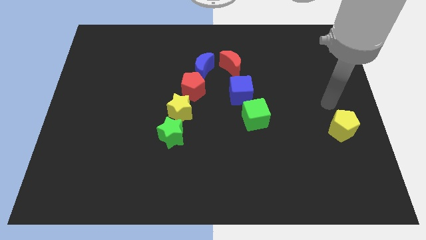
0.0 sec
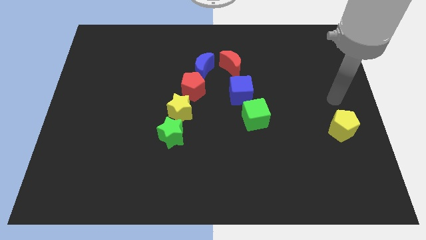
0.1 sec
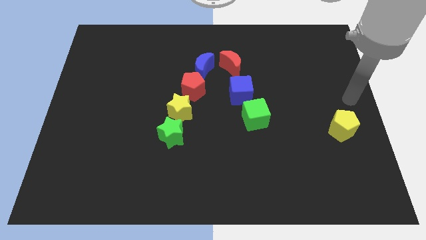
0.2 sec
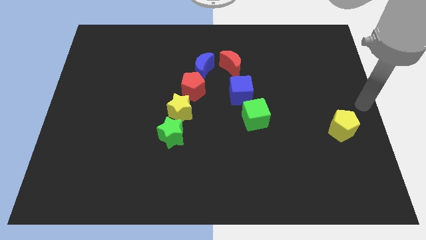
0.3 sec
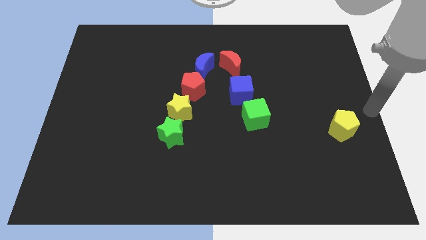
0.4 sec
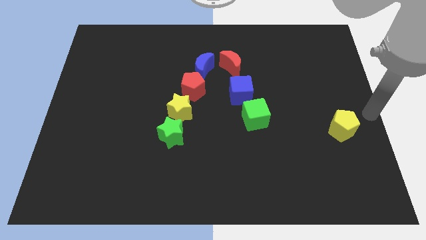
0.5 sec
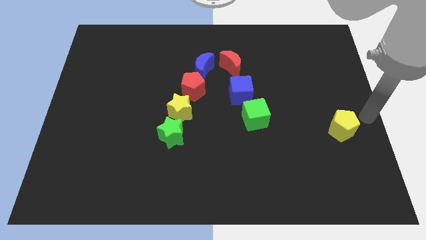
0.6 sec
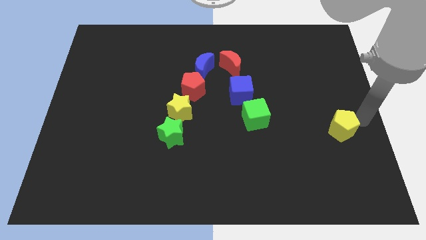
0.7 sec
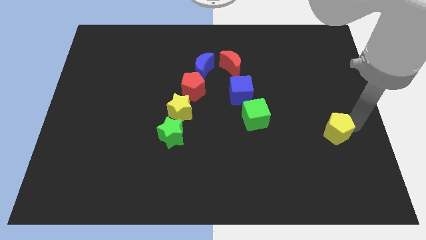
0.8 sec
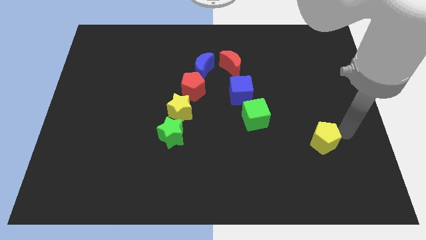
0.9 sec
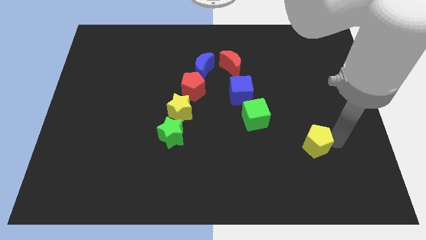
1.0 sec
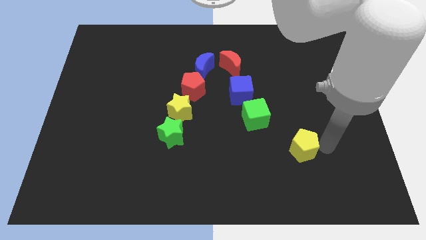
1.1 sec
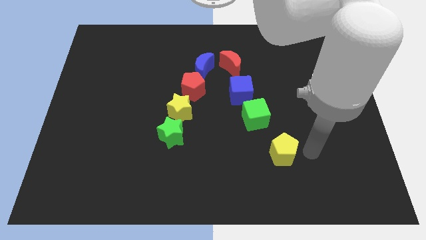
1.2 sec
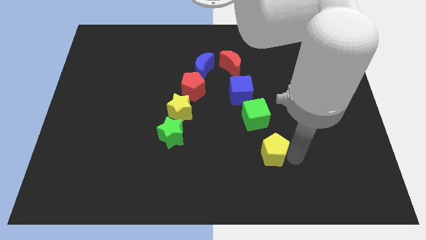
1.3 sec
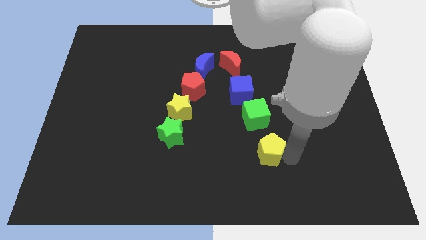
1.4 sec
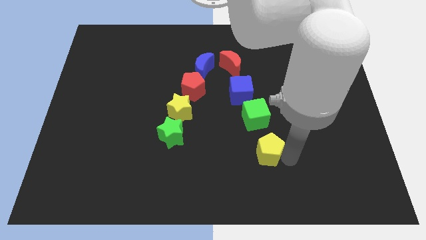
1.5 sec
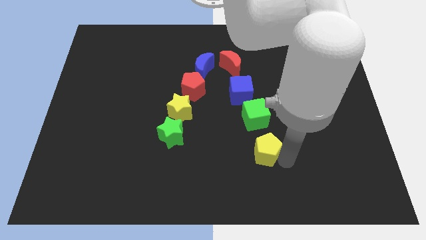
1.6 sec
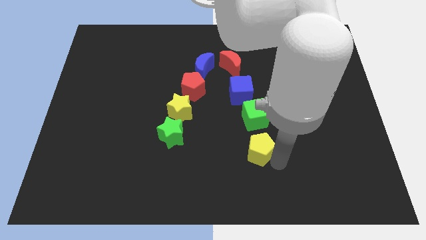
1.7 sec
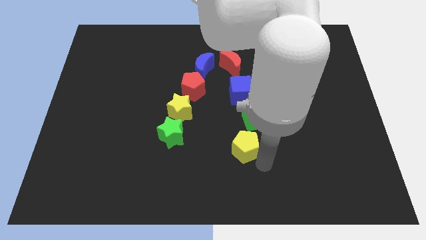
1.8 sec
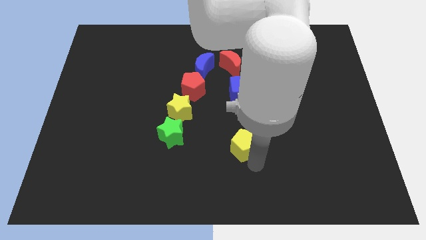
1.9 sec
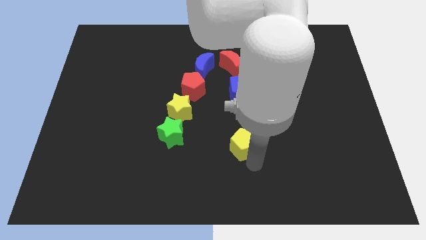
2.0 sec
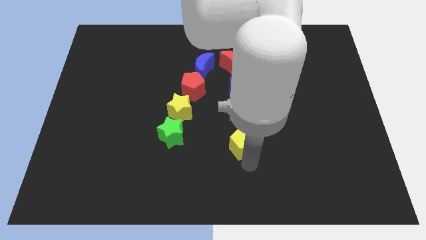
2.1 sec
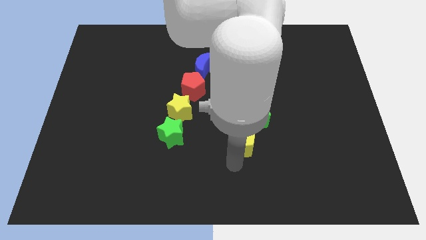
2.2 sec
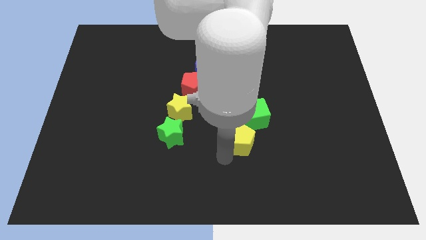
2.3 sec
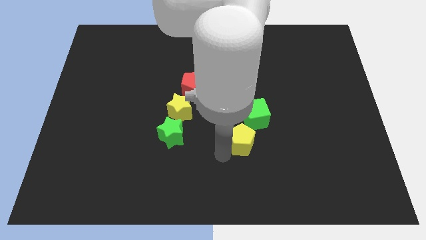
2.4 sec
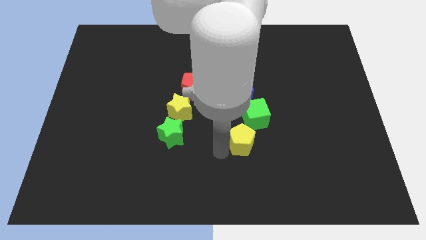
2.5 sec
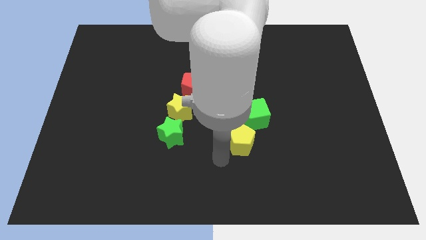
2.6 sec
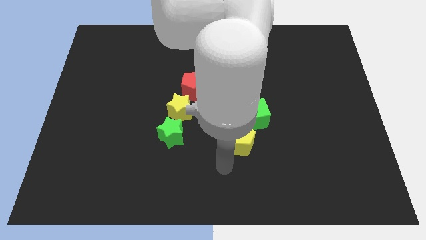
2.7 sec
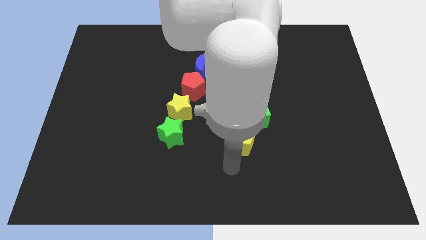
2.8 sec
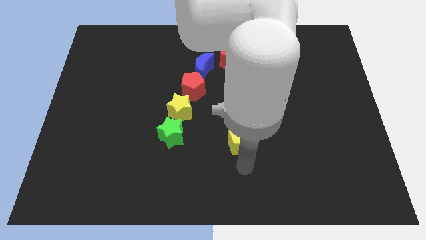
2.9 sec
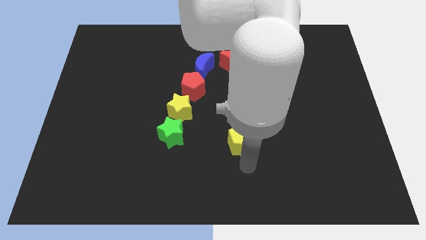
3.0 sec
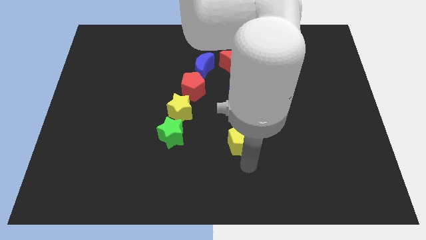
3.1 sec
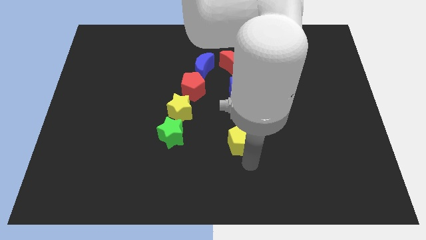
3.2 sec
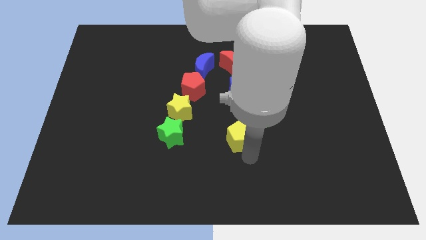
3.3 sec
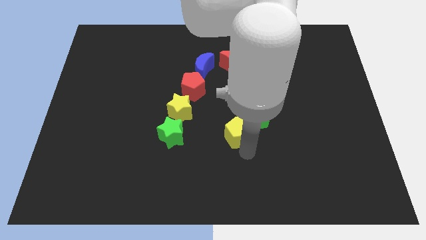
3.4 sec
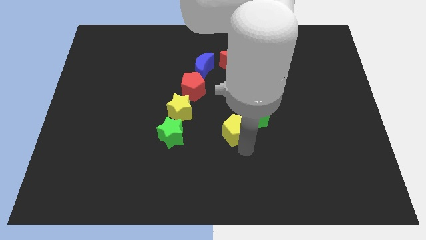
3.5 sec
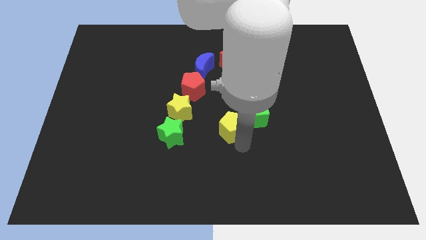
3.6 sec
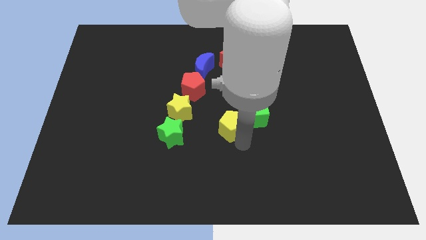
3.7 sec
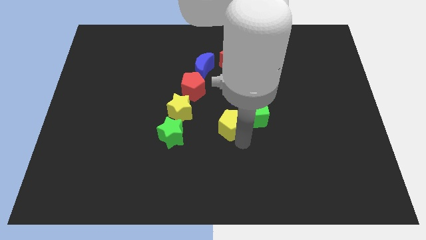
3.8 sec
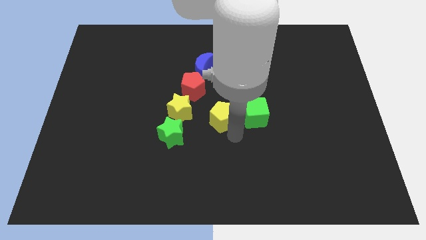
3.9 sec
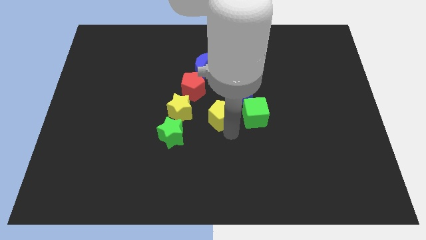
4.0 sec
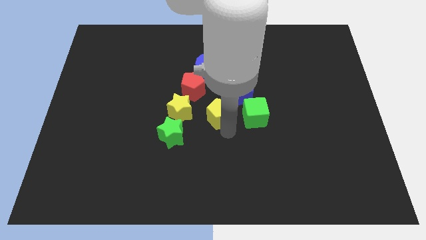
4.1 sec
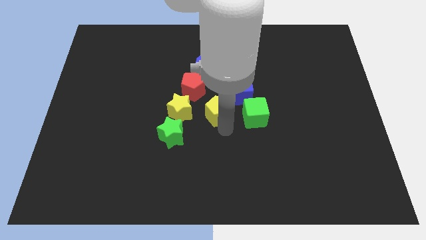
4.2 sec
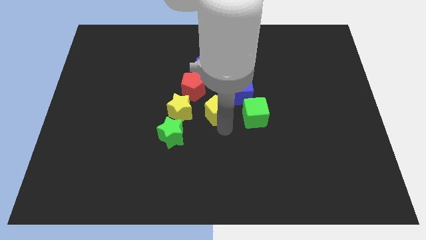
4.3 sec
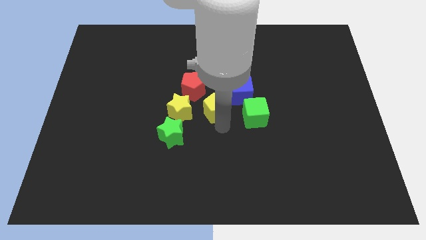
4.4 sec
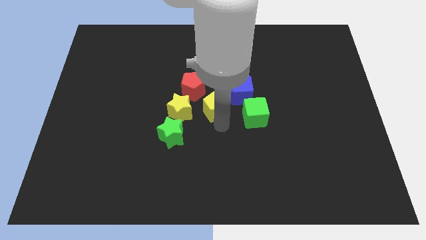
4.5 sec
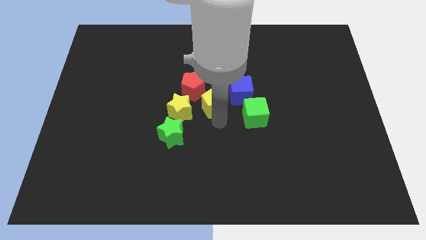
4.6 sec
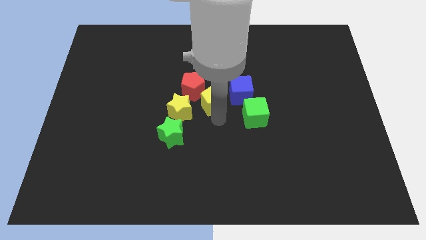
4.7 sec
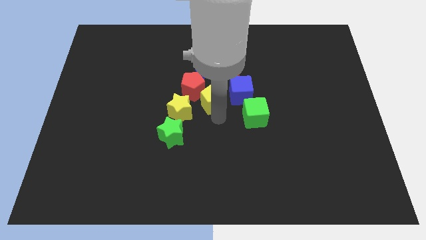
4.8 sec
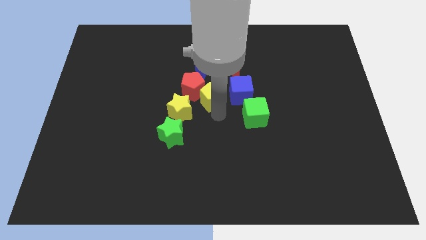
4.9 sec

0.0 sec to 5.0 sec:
move the yellow pentagon in between the red pentagon and blue cube

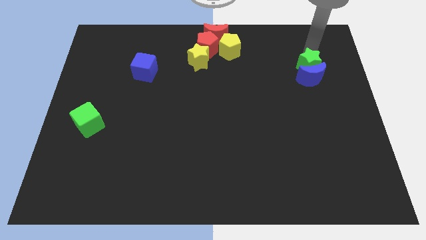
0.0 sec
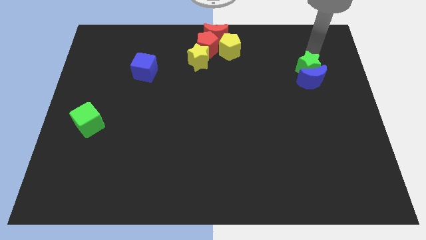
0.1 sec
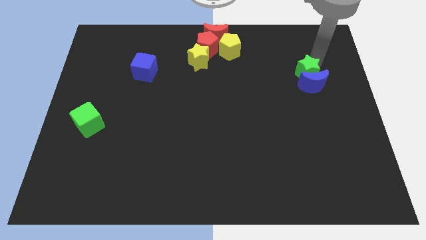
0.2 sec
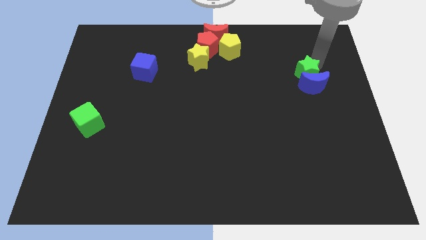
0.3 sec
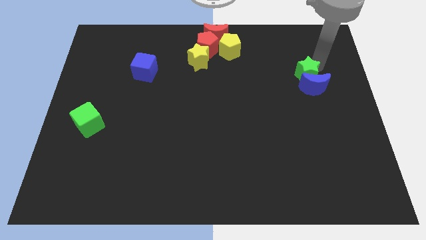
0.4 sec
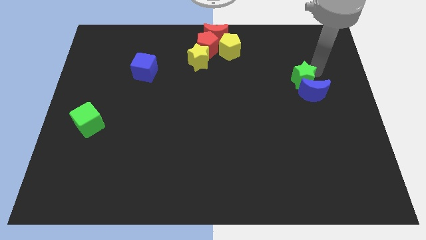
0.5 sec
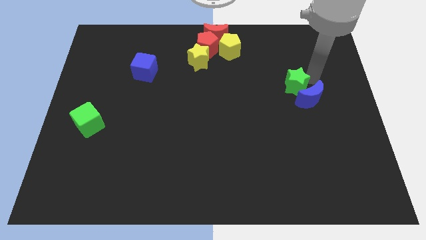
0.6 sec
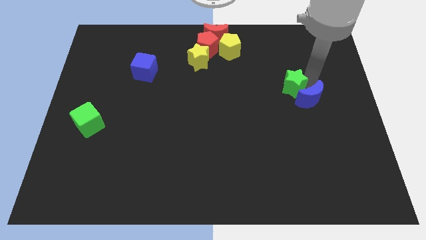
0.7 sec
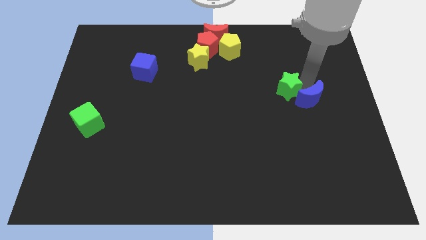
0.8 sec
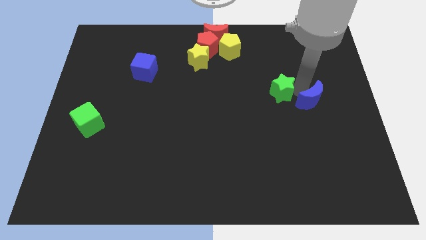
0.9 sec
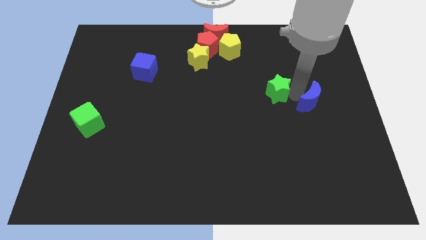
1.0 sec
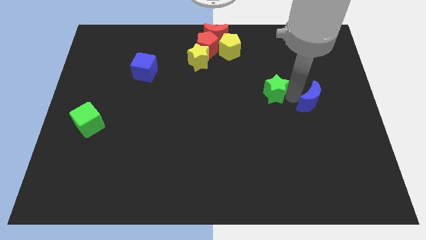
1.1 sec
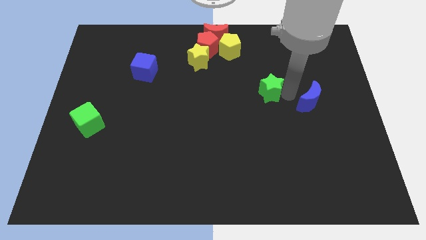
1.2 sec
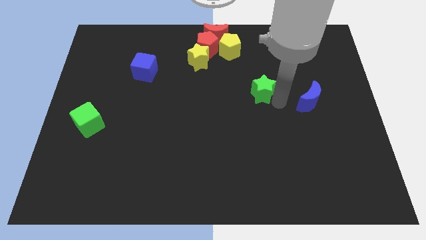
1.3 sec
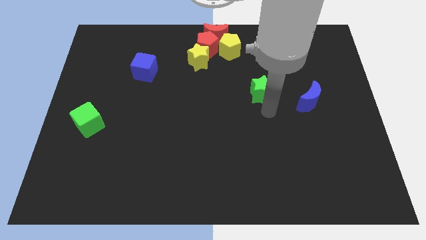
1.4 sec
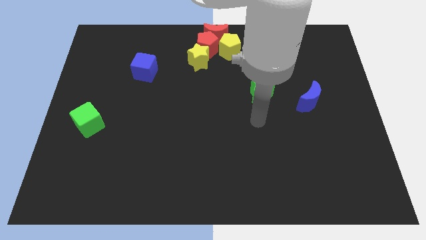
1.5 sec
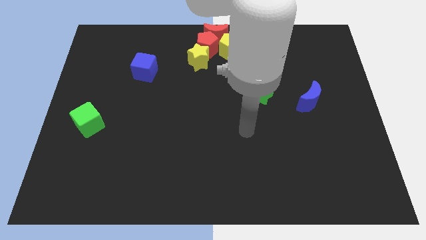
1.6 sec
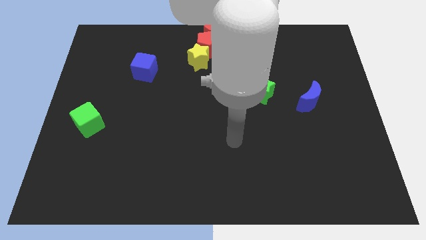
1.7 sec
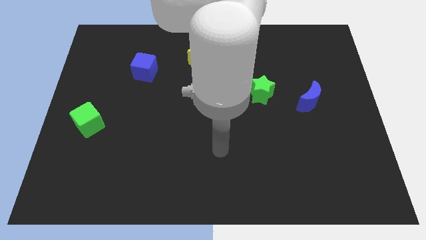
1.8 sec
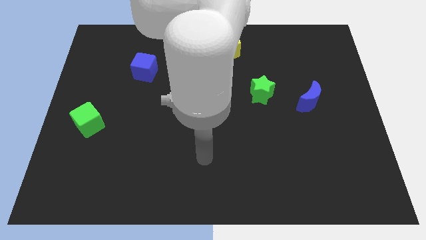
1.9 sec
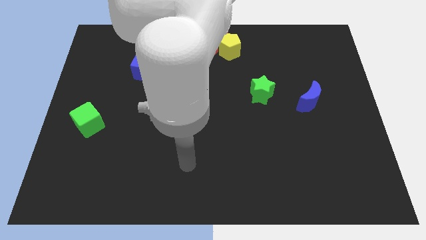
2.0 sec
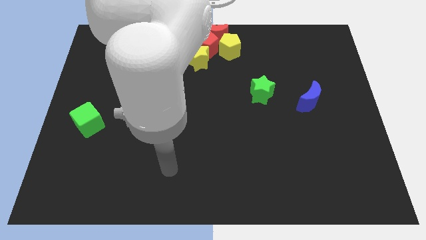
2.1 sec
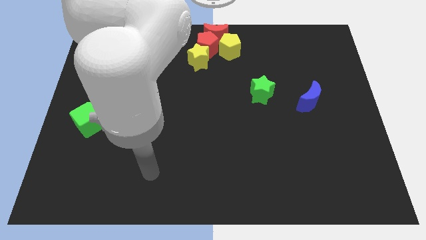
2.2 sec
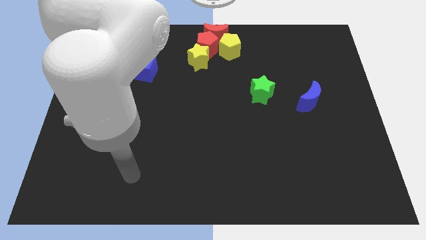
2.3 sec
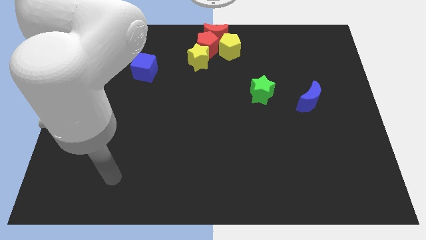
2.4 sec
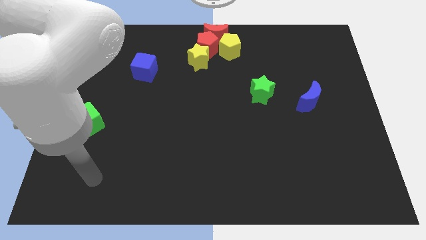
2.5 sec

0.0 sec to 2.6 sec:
separate the green star and blue crescent from each other and go away

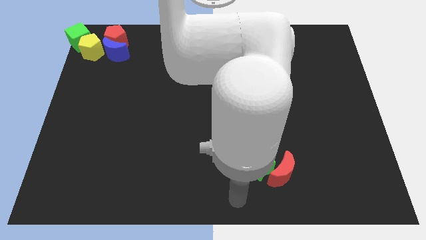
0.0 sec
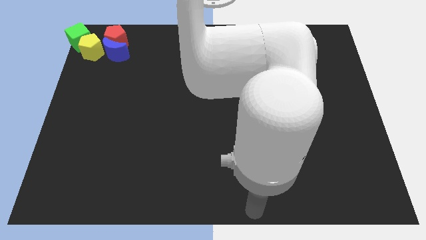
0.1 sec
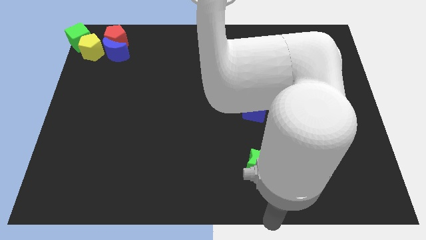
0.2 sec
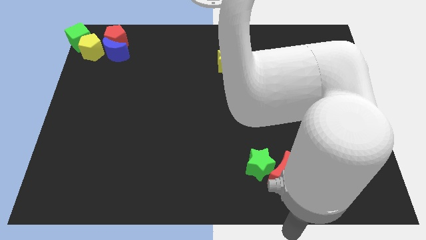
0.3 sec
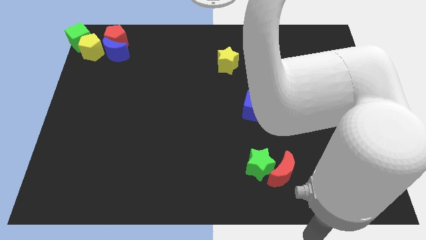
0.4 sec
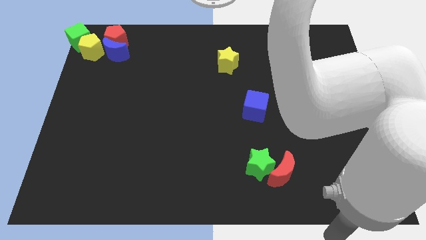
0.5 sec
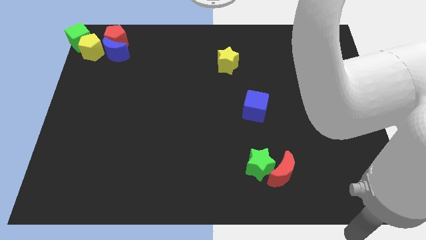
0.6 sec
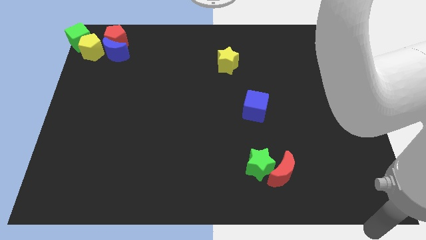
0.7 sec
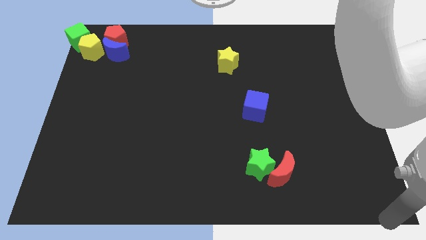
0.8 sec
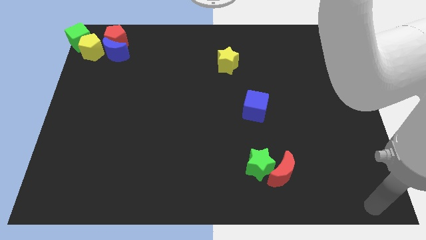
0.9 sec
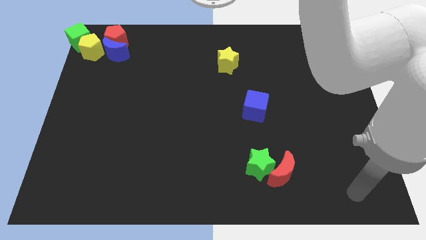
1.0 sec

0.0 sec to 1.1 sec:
move the arm to the bottom right corner of the board

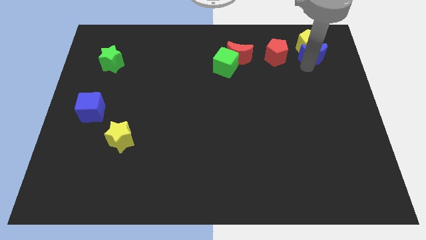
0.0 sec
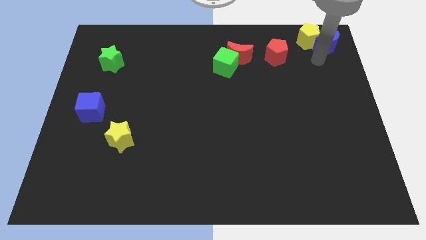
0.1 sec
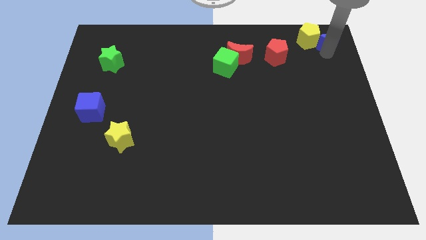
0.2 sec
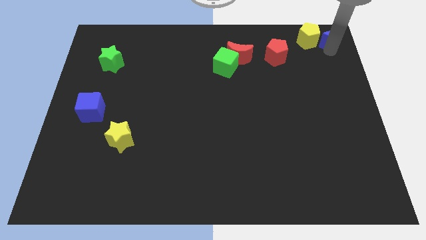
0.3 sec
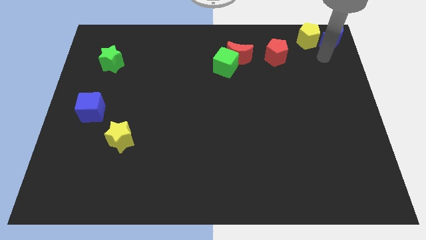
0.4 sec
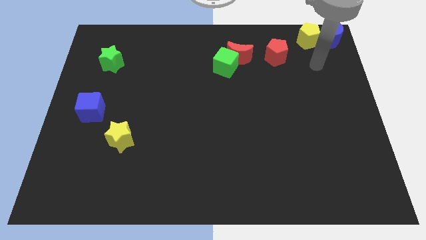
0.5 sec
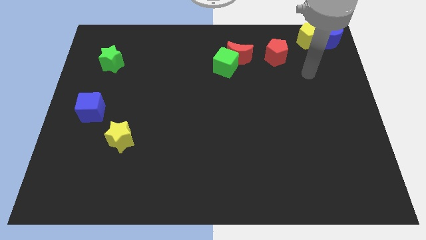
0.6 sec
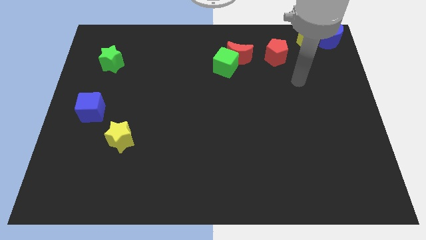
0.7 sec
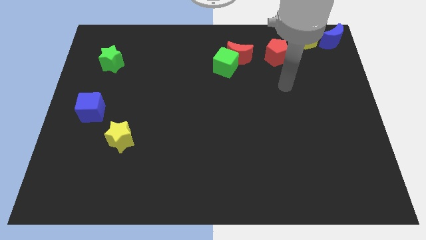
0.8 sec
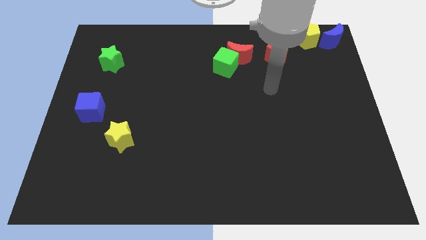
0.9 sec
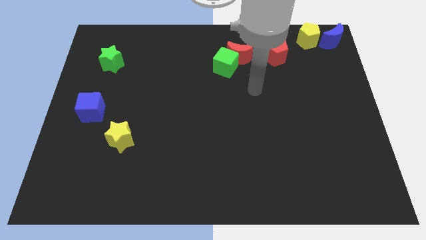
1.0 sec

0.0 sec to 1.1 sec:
separate the blue moon from the yellow pentagon
